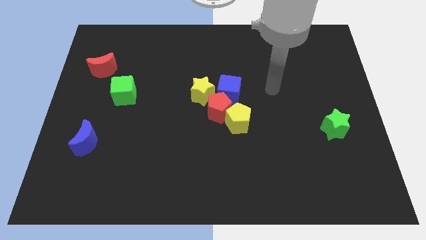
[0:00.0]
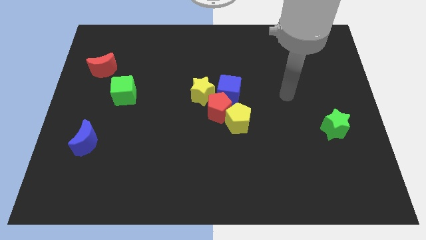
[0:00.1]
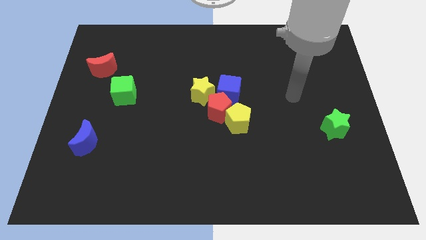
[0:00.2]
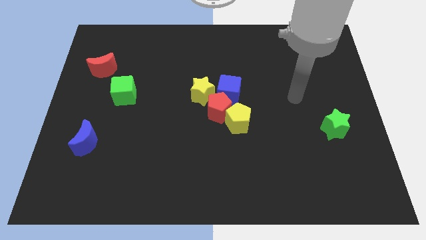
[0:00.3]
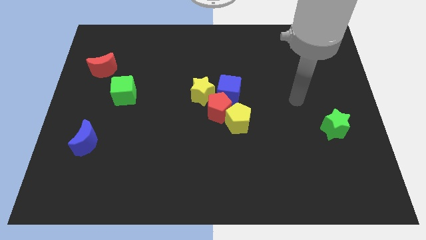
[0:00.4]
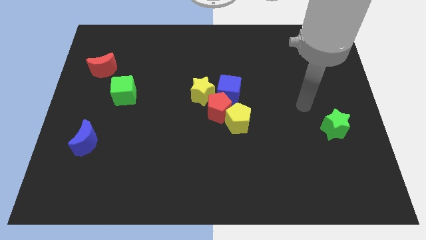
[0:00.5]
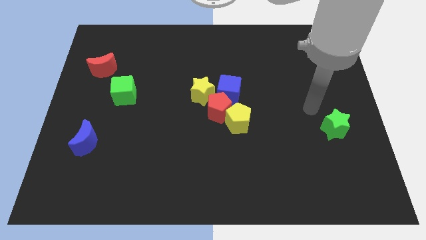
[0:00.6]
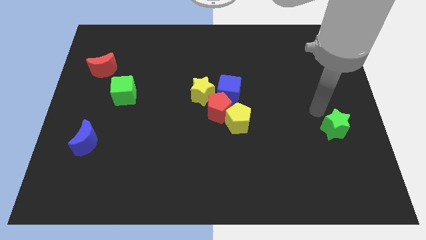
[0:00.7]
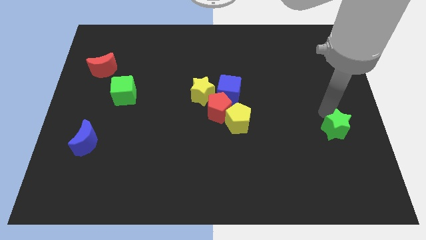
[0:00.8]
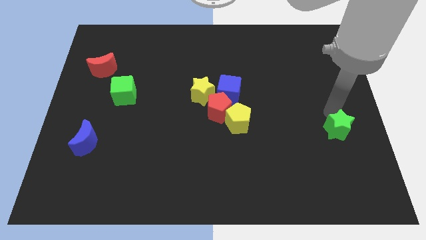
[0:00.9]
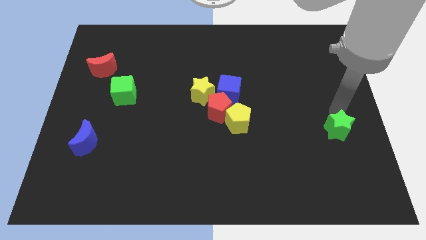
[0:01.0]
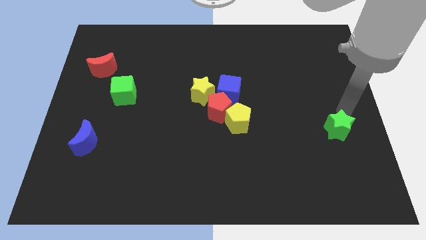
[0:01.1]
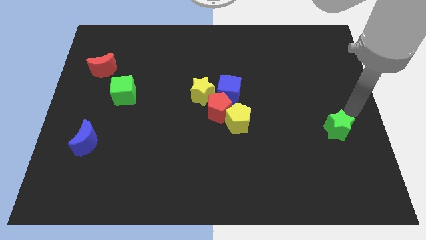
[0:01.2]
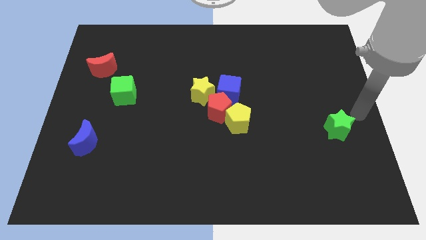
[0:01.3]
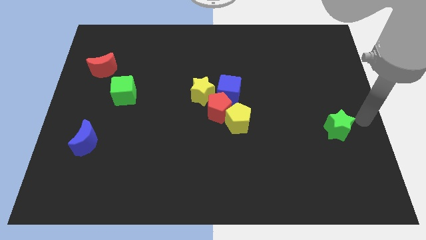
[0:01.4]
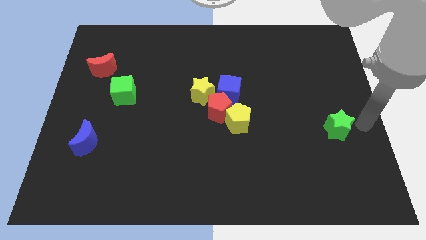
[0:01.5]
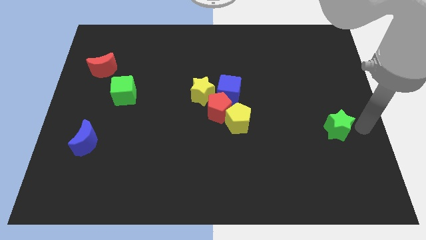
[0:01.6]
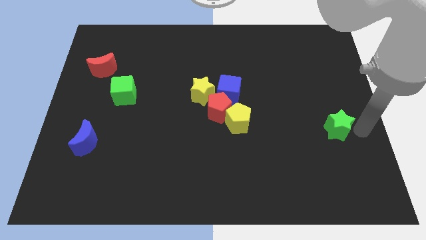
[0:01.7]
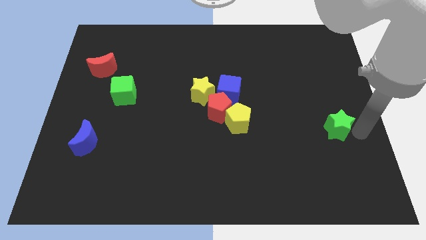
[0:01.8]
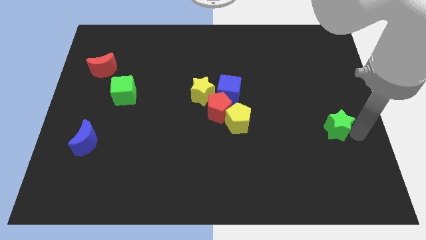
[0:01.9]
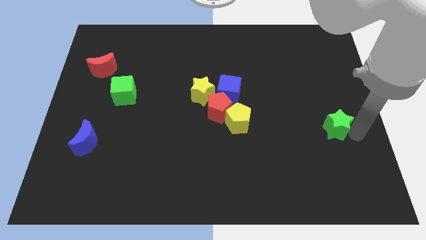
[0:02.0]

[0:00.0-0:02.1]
point your arm right to green star

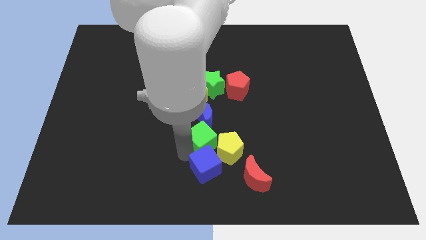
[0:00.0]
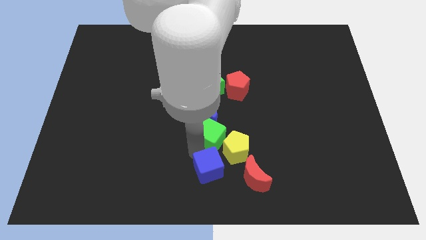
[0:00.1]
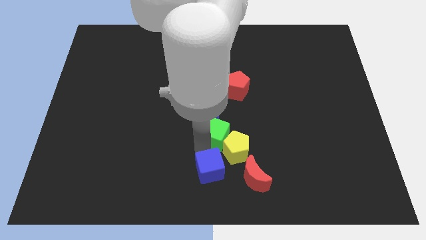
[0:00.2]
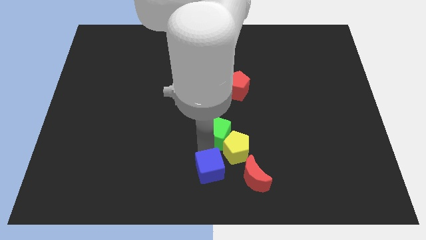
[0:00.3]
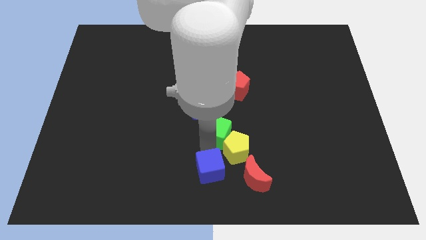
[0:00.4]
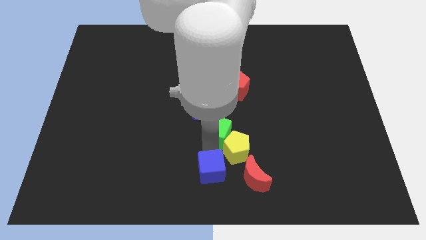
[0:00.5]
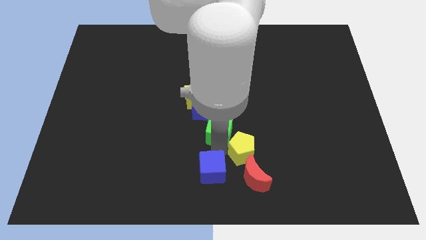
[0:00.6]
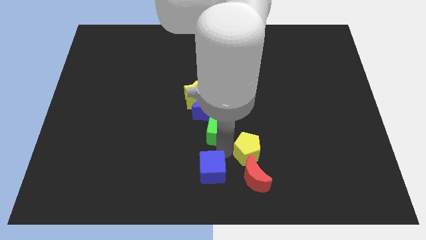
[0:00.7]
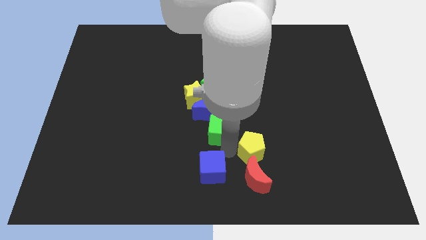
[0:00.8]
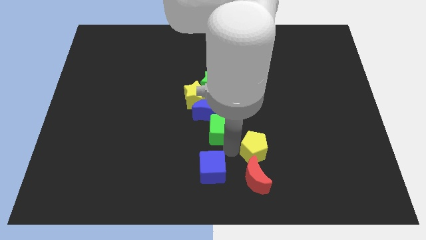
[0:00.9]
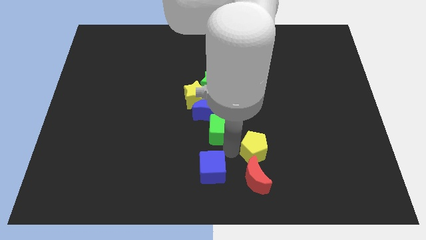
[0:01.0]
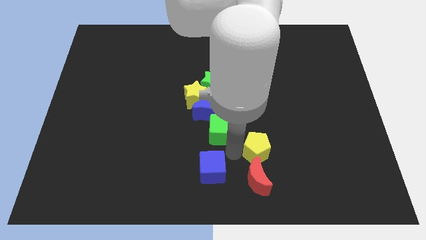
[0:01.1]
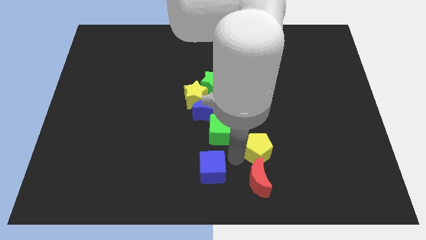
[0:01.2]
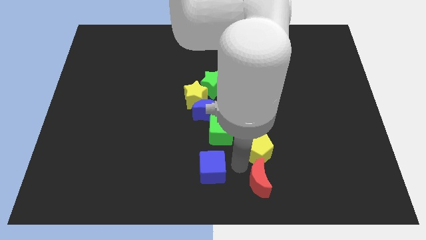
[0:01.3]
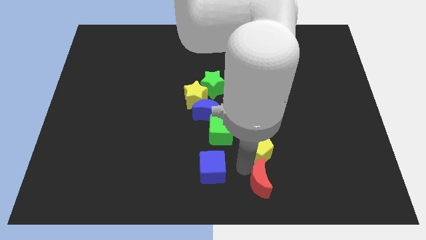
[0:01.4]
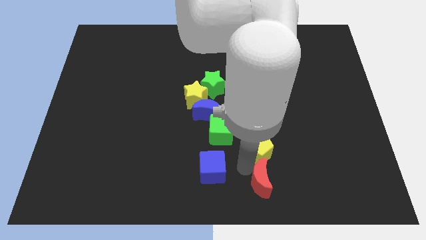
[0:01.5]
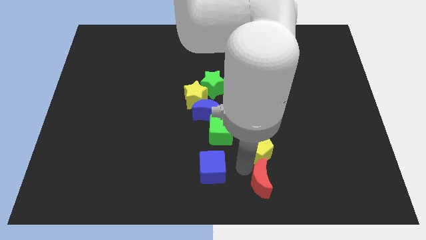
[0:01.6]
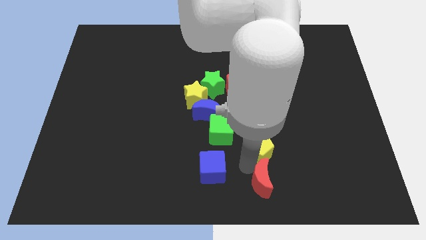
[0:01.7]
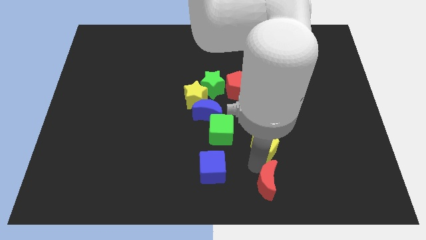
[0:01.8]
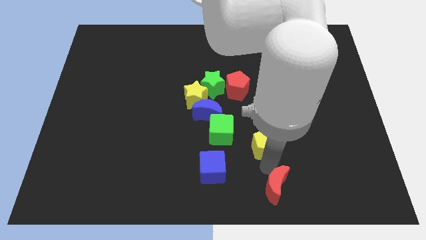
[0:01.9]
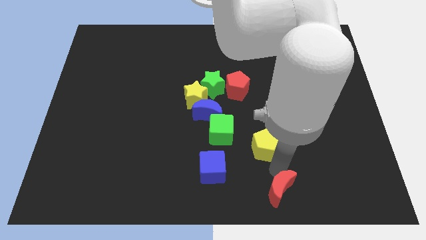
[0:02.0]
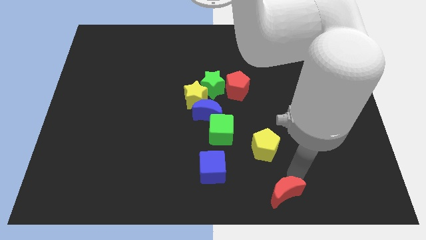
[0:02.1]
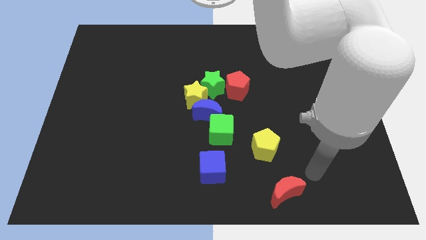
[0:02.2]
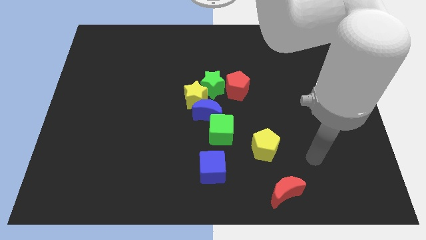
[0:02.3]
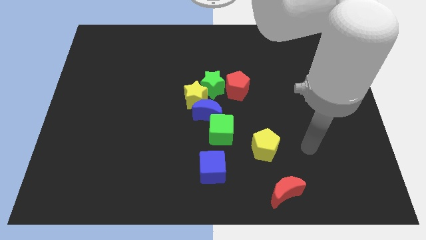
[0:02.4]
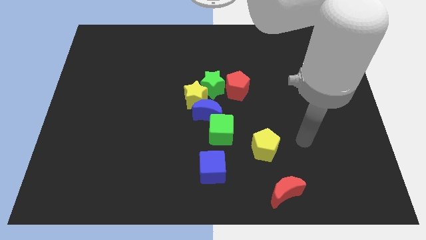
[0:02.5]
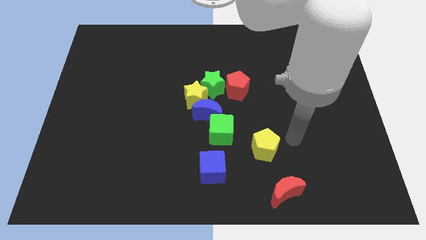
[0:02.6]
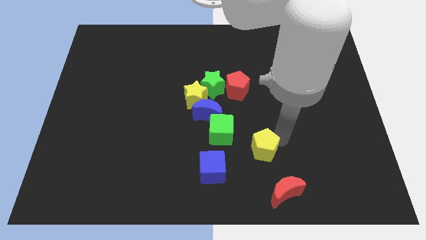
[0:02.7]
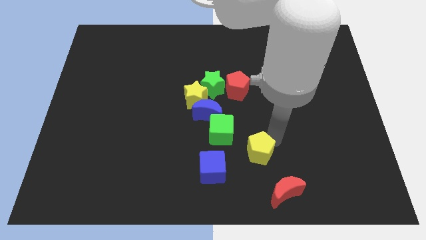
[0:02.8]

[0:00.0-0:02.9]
push the red crescent away from the group of blocks

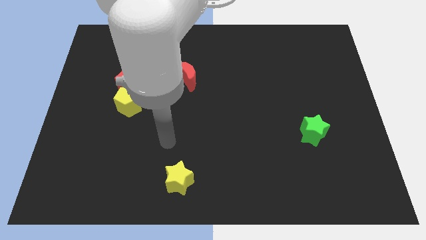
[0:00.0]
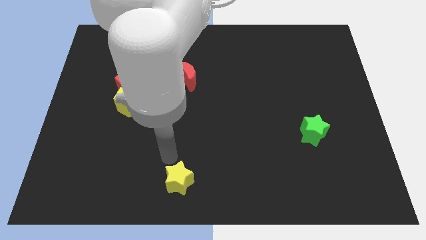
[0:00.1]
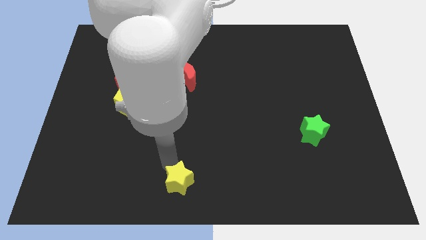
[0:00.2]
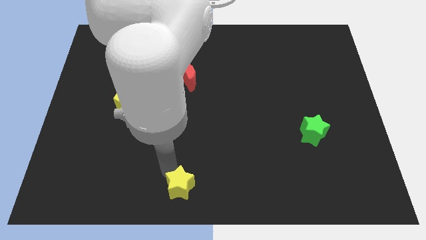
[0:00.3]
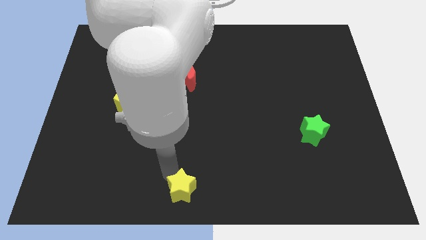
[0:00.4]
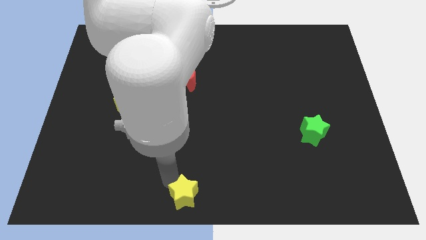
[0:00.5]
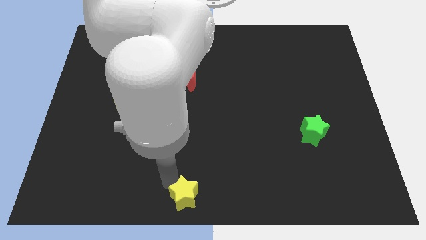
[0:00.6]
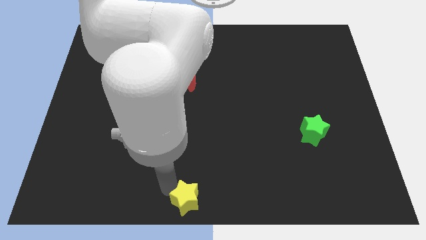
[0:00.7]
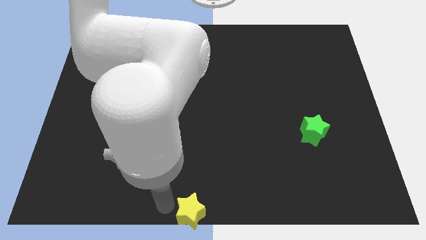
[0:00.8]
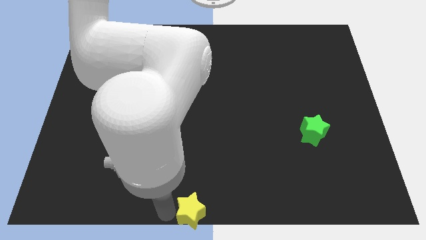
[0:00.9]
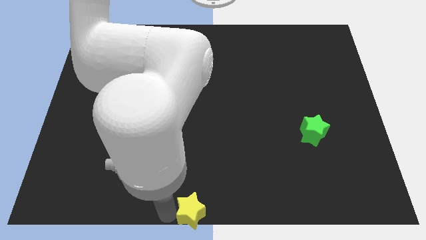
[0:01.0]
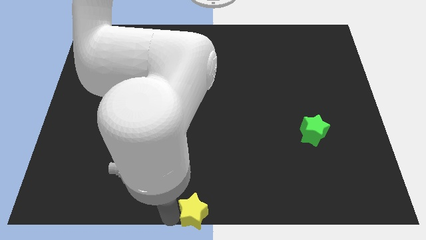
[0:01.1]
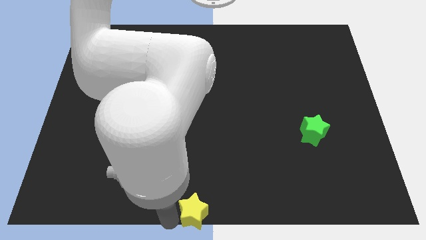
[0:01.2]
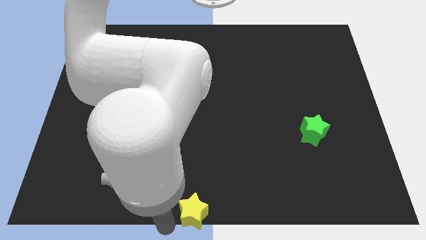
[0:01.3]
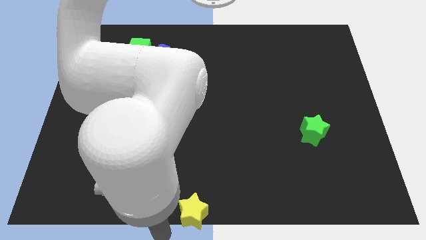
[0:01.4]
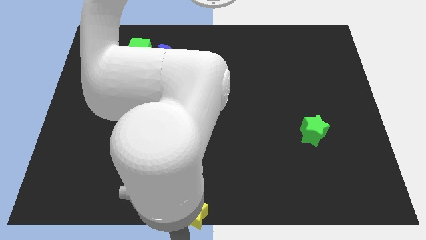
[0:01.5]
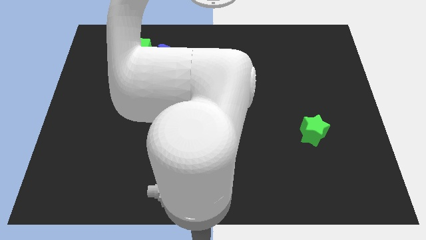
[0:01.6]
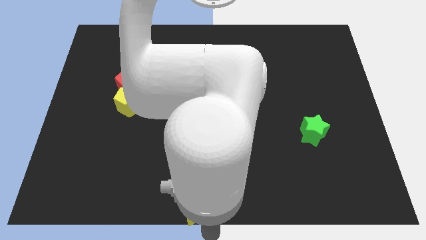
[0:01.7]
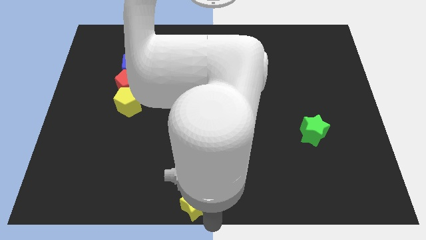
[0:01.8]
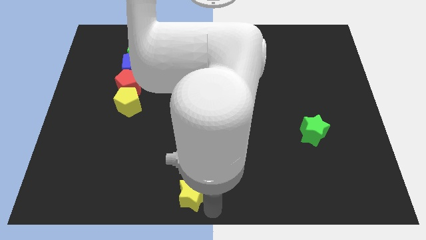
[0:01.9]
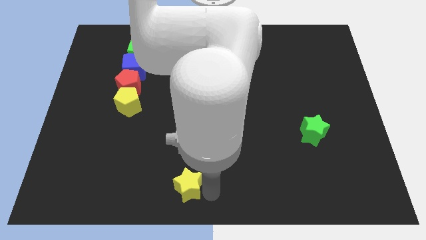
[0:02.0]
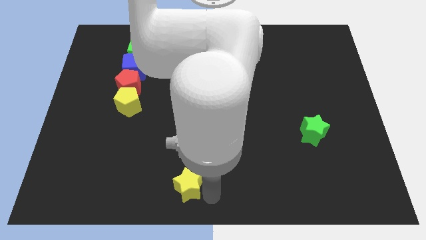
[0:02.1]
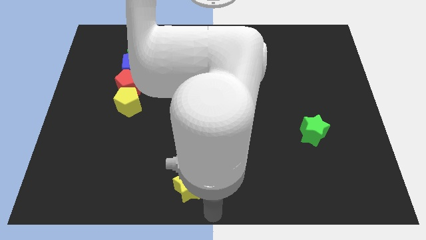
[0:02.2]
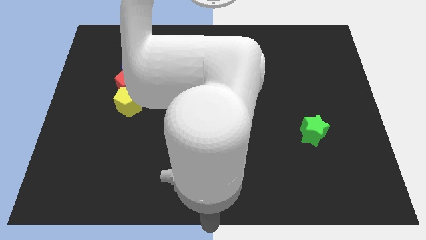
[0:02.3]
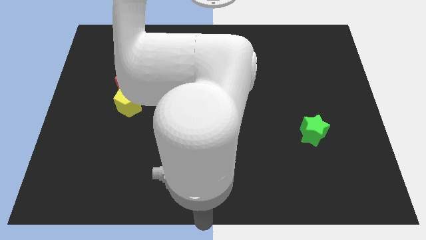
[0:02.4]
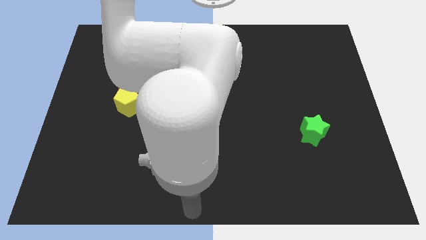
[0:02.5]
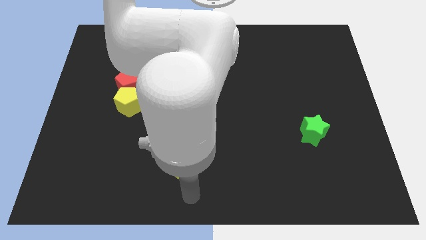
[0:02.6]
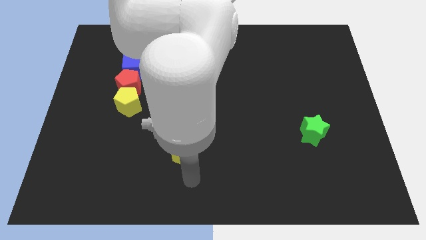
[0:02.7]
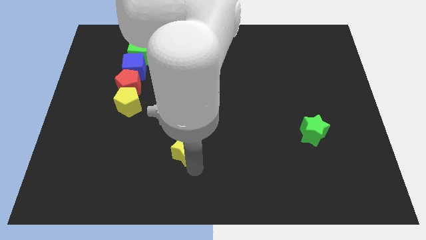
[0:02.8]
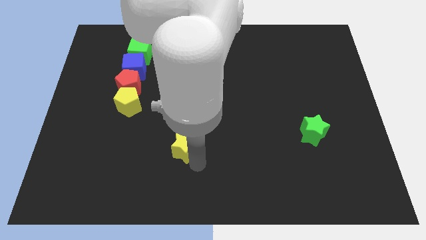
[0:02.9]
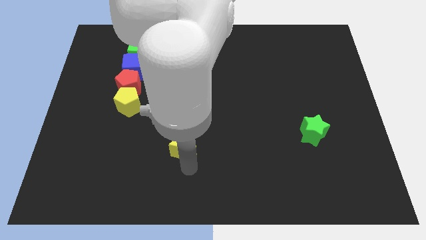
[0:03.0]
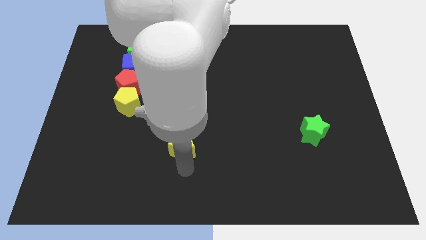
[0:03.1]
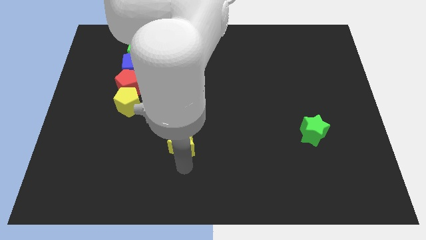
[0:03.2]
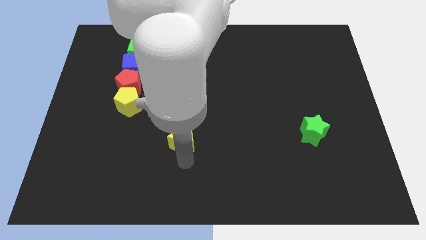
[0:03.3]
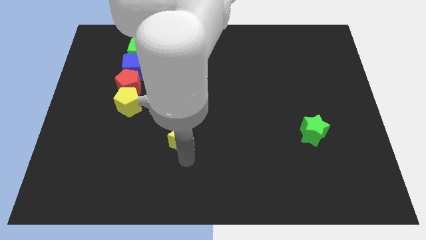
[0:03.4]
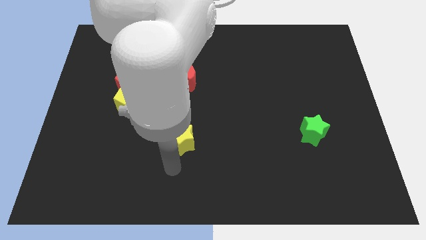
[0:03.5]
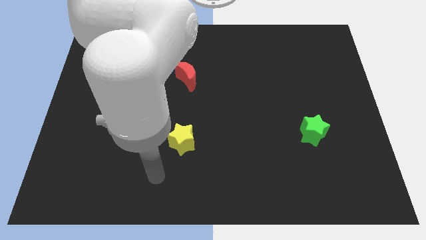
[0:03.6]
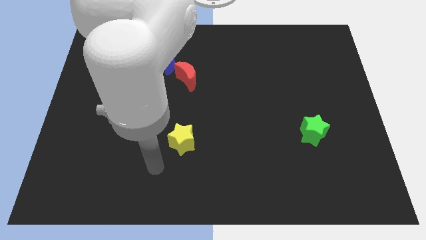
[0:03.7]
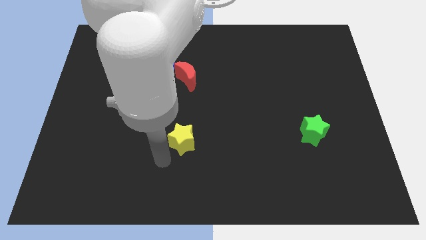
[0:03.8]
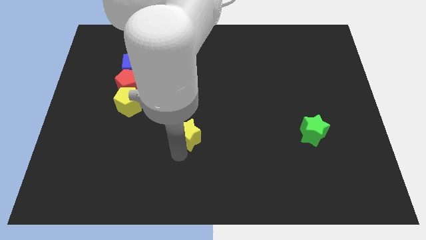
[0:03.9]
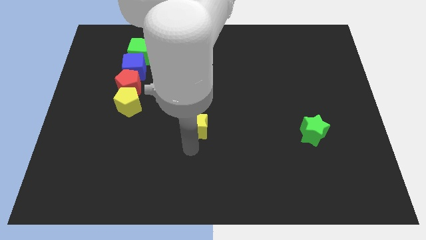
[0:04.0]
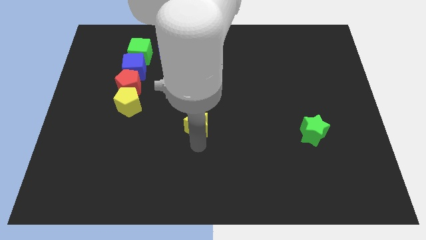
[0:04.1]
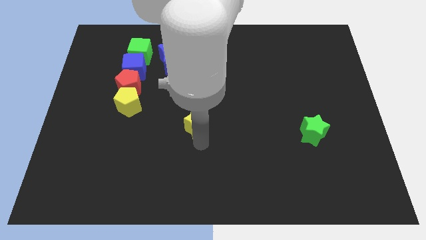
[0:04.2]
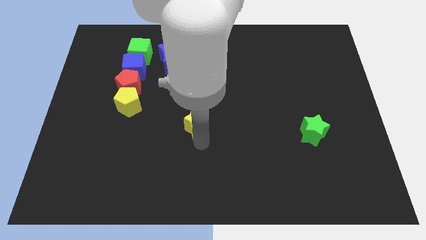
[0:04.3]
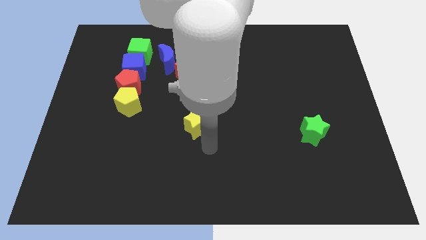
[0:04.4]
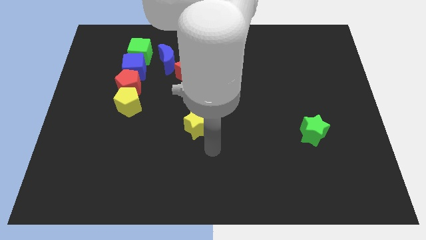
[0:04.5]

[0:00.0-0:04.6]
move the yellow star towards the bottom of red moon
